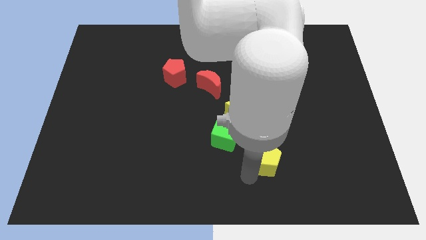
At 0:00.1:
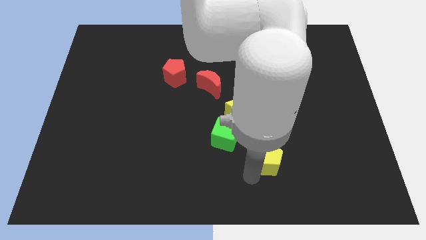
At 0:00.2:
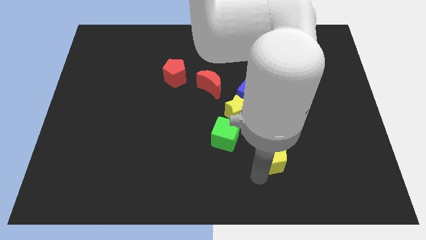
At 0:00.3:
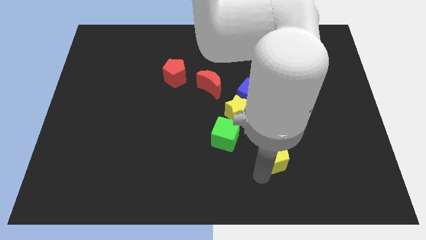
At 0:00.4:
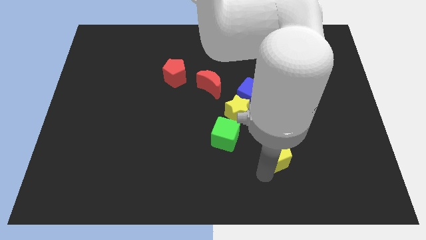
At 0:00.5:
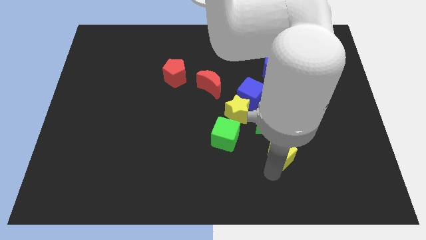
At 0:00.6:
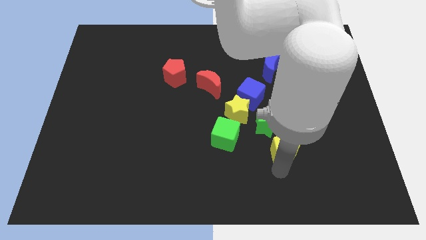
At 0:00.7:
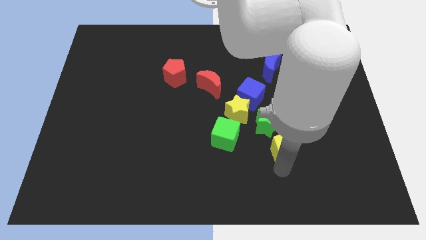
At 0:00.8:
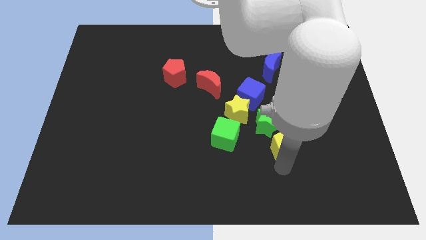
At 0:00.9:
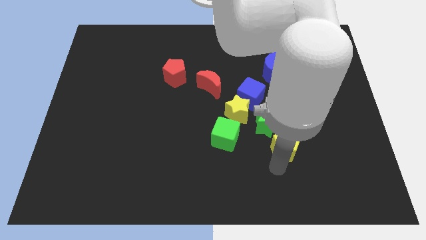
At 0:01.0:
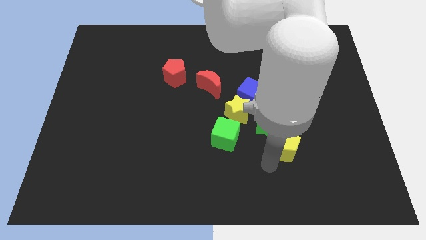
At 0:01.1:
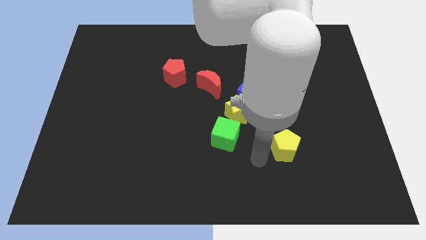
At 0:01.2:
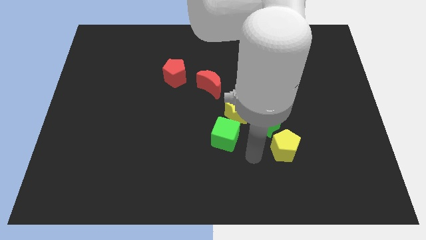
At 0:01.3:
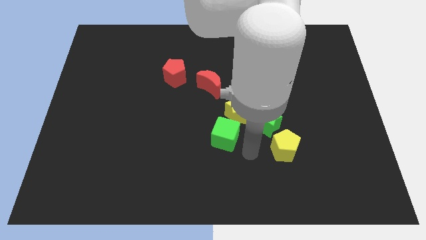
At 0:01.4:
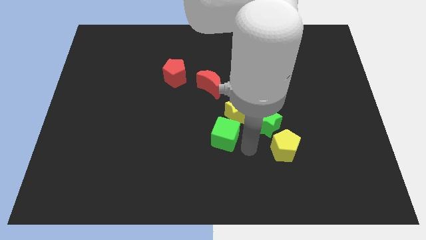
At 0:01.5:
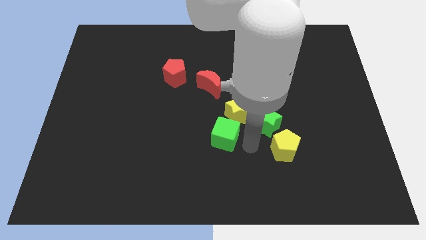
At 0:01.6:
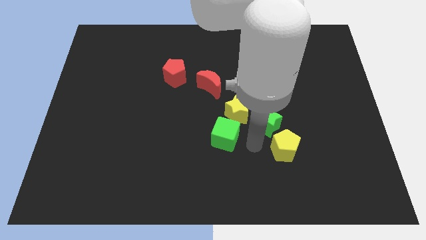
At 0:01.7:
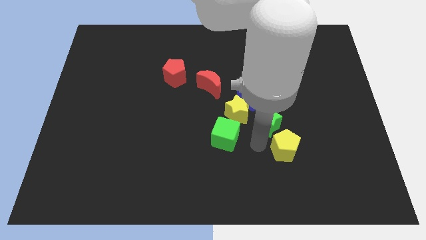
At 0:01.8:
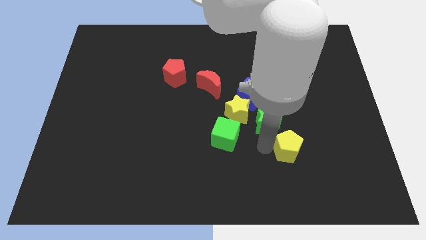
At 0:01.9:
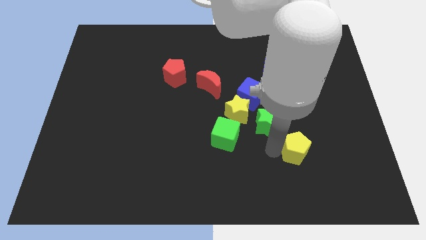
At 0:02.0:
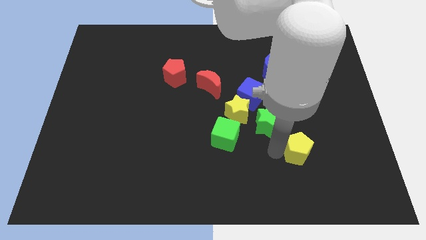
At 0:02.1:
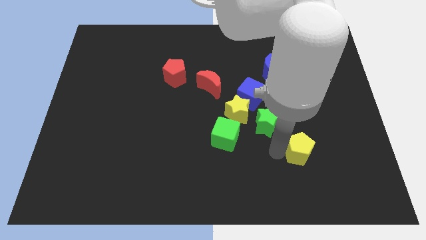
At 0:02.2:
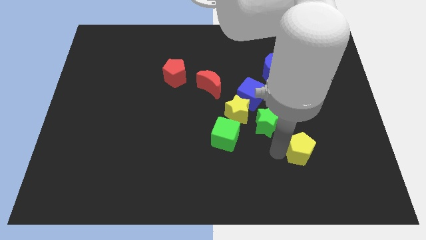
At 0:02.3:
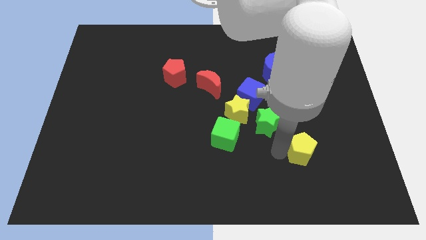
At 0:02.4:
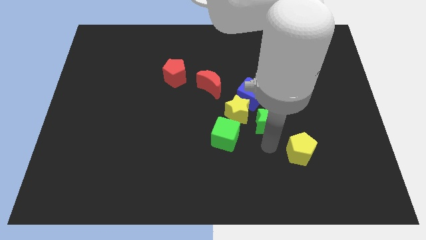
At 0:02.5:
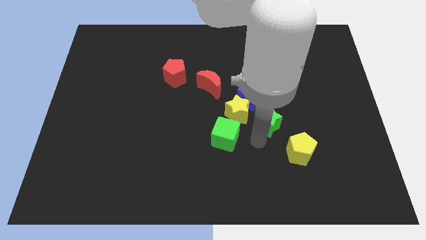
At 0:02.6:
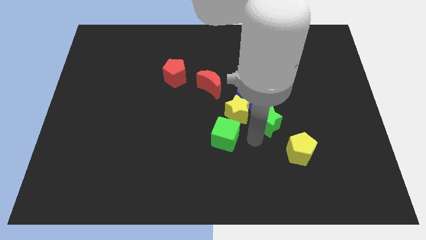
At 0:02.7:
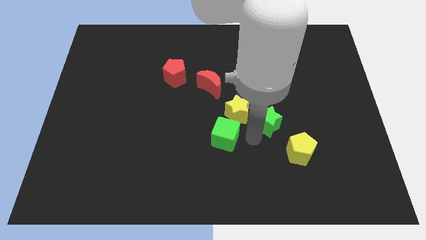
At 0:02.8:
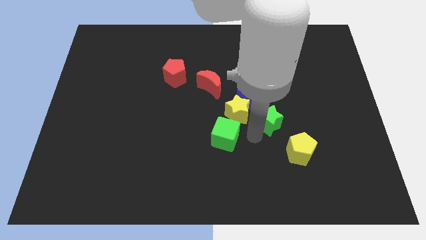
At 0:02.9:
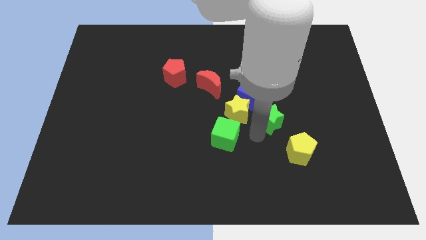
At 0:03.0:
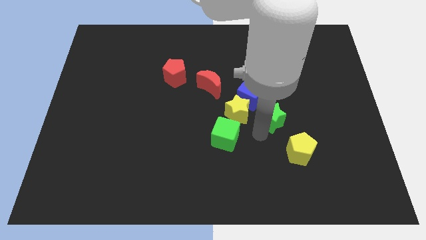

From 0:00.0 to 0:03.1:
place the yellow pentagon towards the bottom right side of the green star

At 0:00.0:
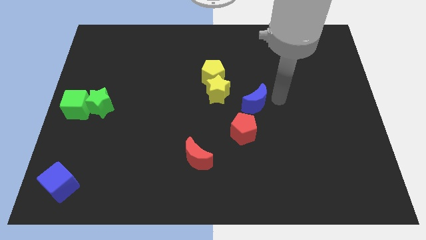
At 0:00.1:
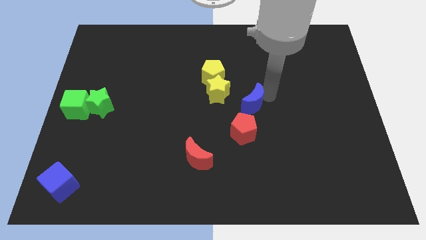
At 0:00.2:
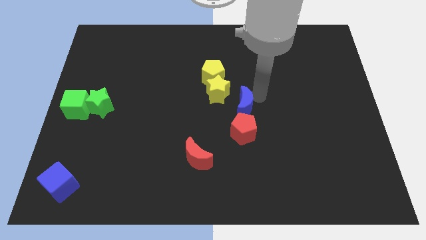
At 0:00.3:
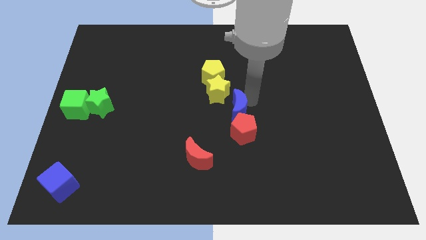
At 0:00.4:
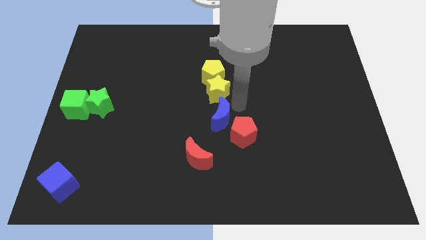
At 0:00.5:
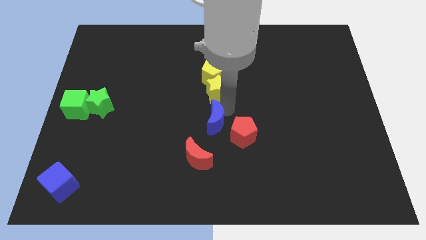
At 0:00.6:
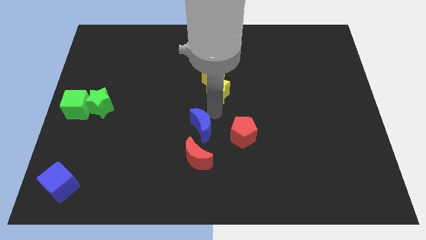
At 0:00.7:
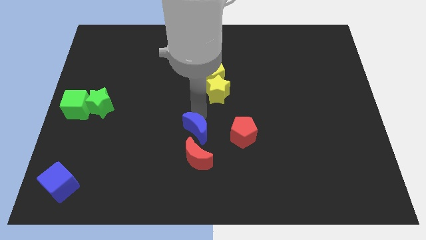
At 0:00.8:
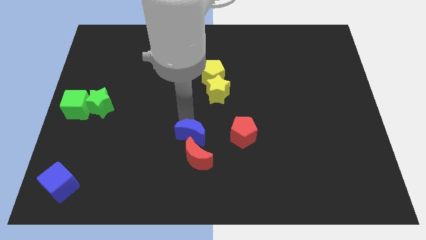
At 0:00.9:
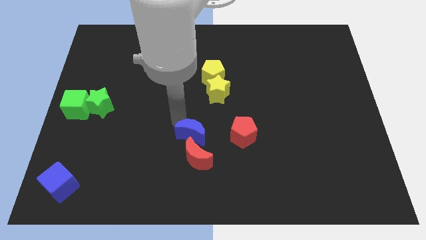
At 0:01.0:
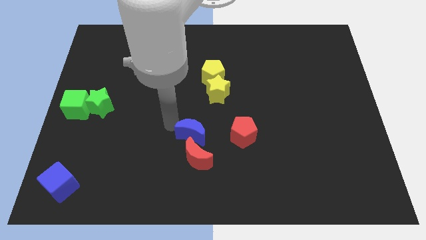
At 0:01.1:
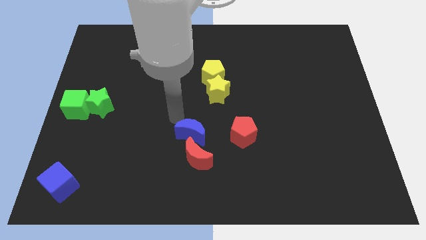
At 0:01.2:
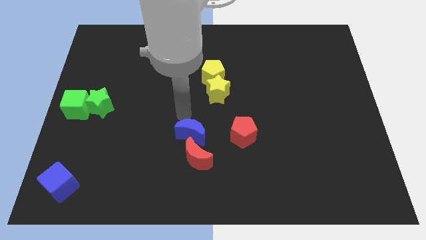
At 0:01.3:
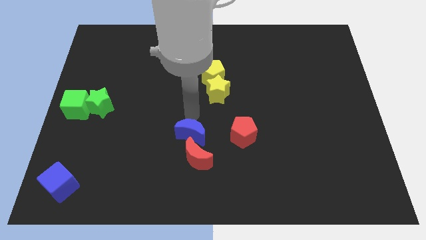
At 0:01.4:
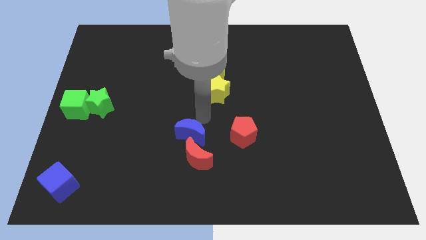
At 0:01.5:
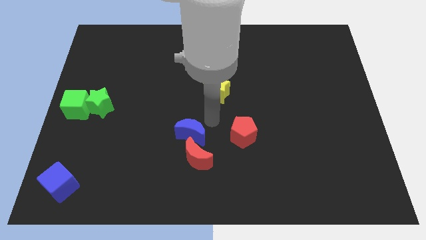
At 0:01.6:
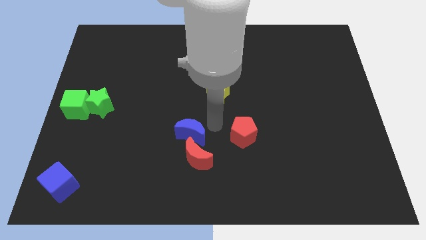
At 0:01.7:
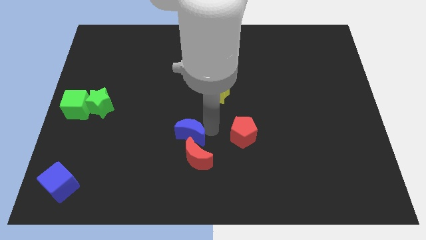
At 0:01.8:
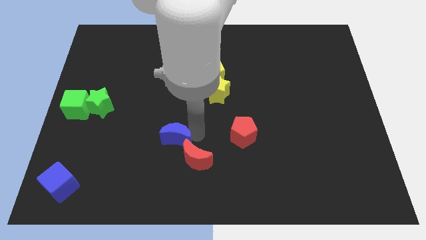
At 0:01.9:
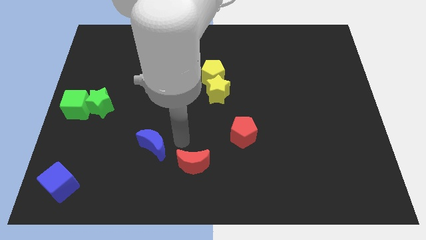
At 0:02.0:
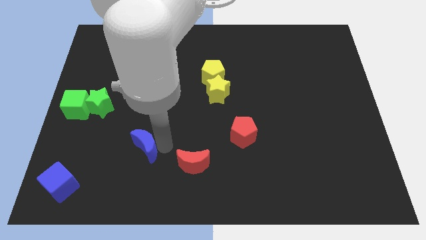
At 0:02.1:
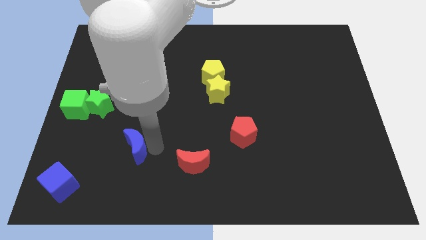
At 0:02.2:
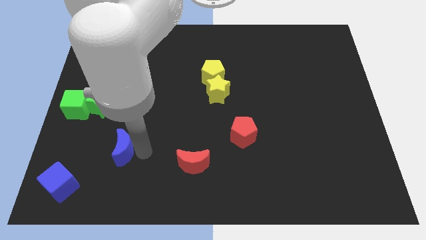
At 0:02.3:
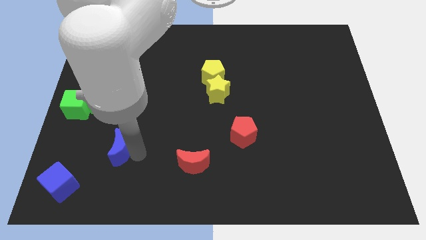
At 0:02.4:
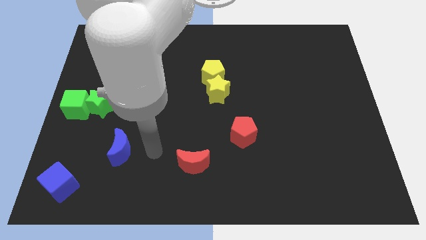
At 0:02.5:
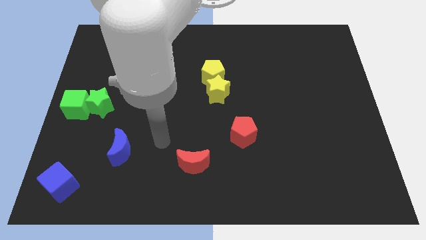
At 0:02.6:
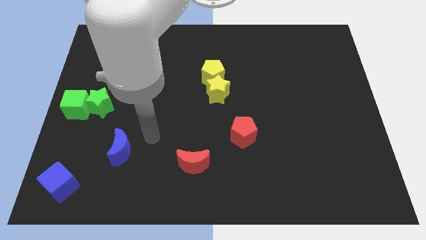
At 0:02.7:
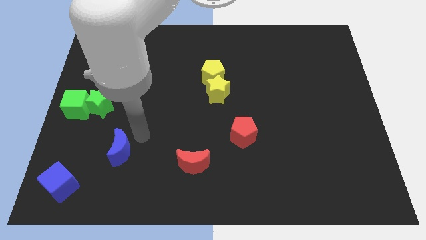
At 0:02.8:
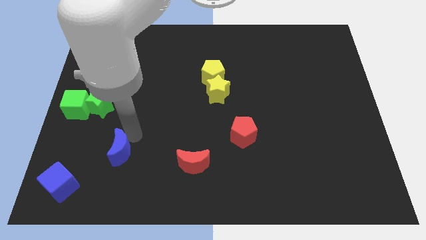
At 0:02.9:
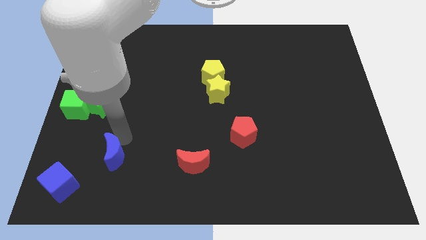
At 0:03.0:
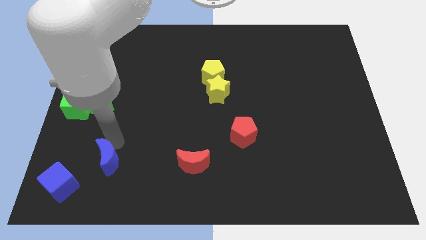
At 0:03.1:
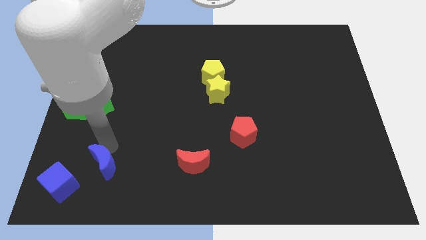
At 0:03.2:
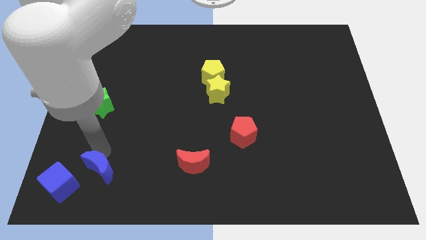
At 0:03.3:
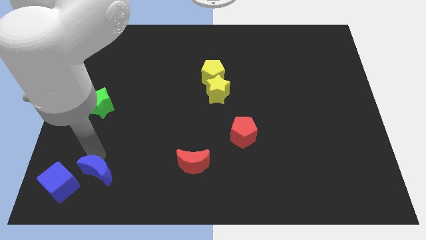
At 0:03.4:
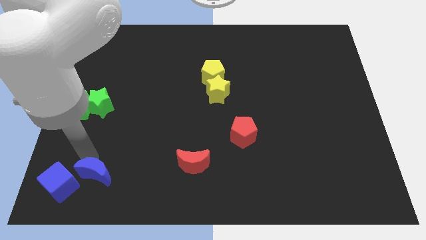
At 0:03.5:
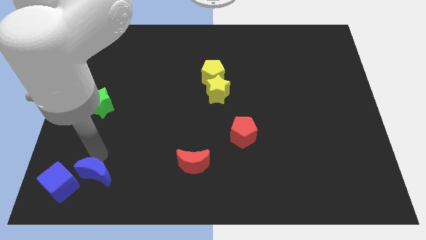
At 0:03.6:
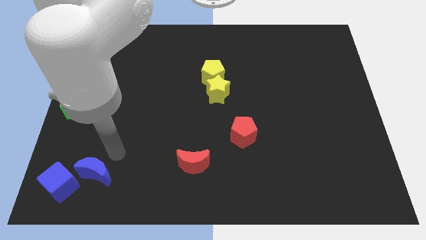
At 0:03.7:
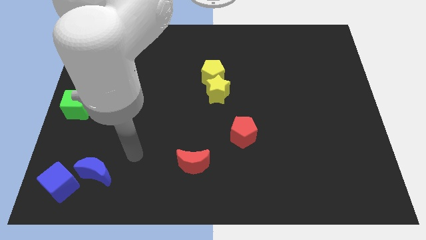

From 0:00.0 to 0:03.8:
push the blue crescent vertically below the green star

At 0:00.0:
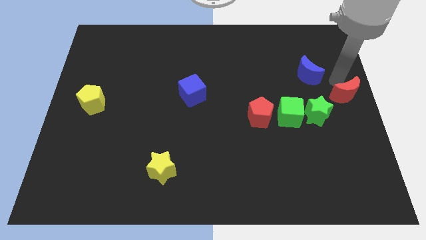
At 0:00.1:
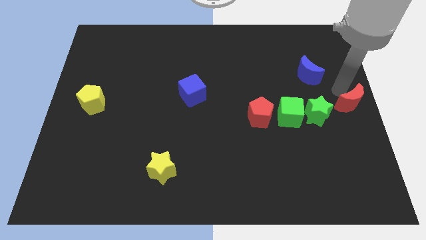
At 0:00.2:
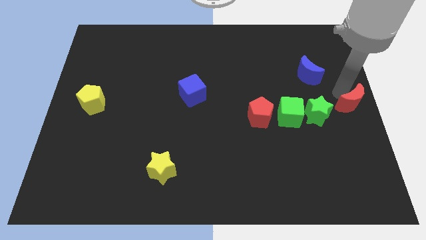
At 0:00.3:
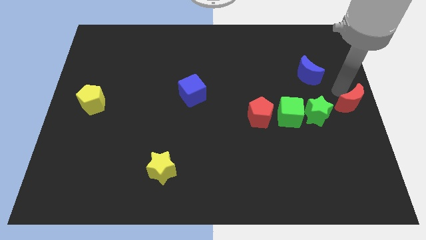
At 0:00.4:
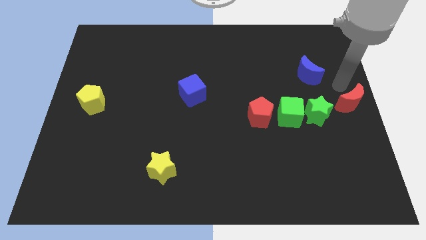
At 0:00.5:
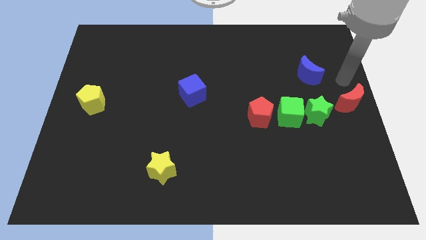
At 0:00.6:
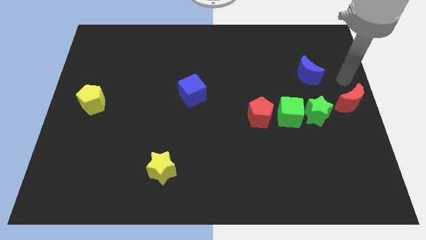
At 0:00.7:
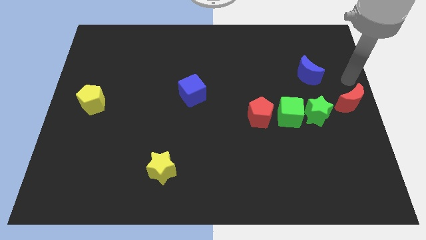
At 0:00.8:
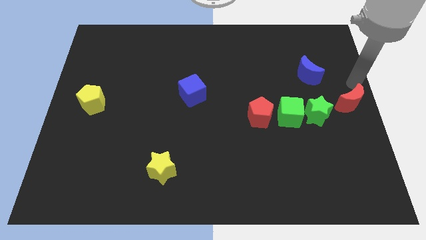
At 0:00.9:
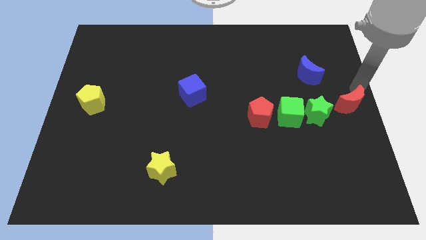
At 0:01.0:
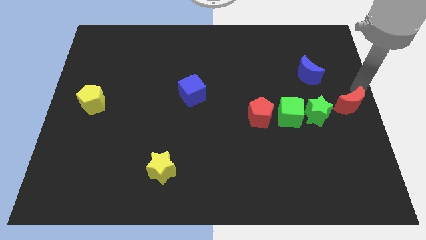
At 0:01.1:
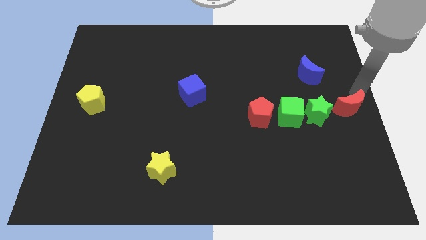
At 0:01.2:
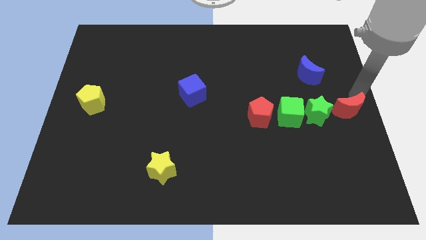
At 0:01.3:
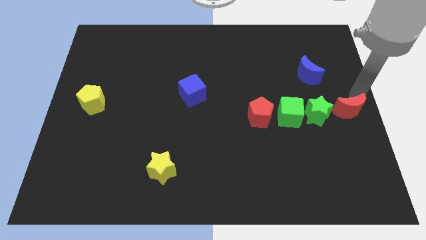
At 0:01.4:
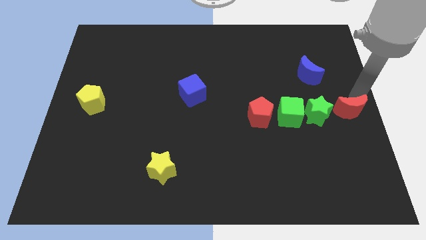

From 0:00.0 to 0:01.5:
move the red moon right to the green star

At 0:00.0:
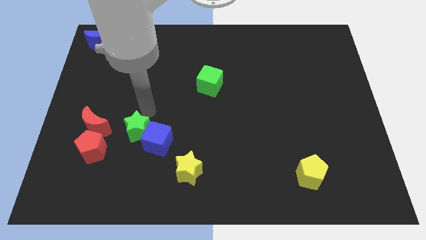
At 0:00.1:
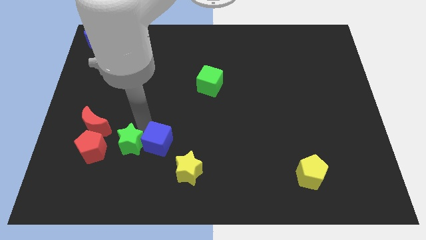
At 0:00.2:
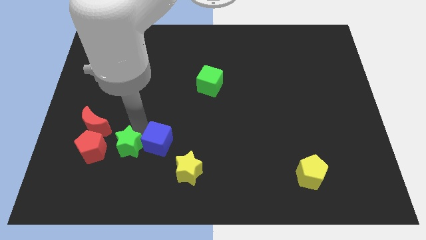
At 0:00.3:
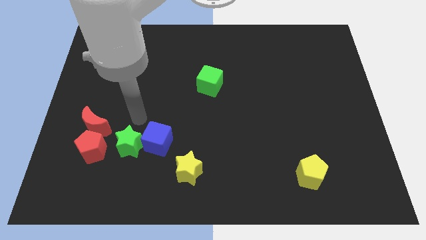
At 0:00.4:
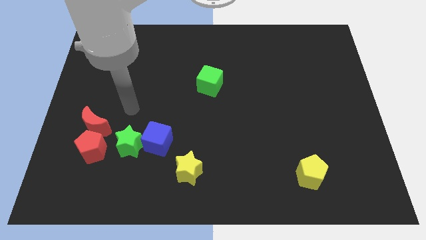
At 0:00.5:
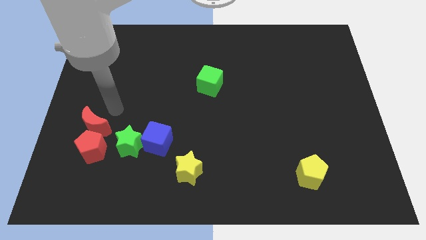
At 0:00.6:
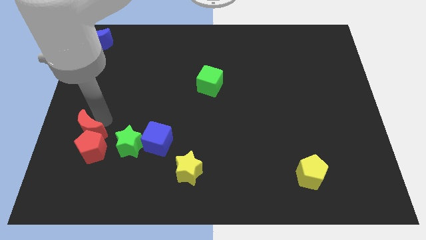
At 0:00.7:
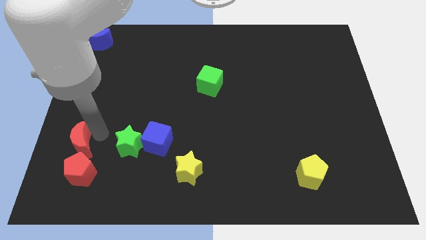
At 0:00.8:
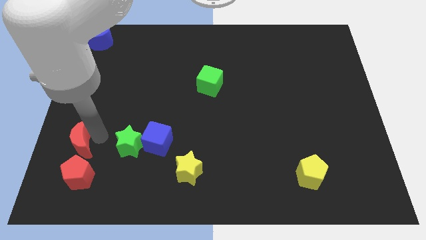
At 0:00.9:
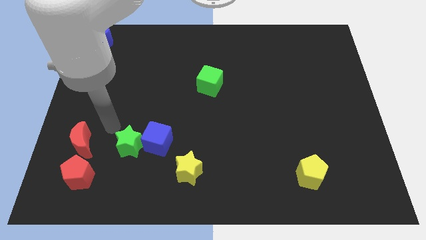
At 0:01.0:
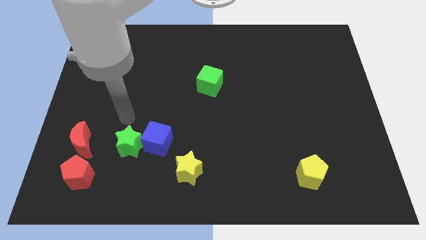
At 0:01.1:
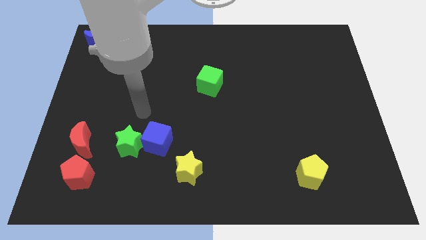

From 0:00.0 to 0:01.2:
place red moon to the left of green star
